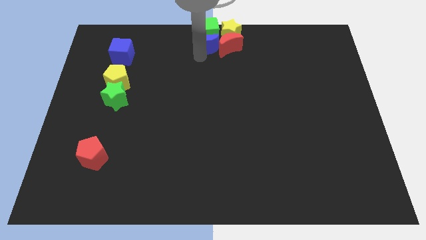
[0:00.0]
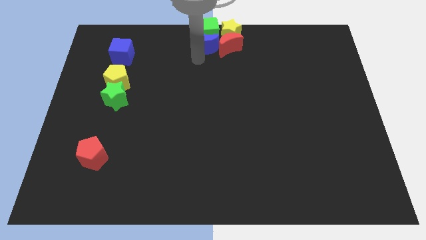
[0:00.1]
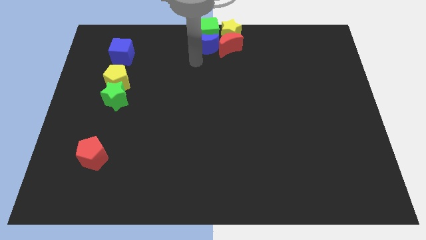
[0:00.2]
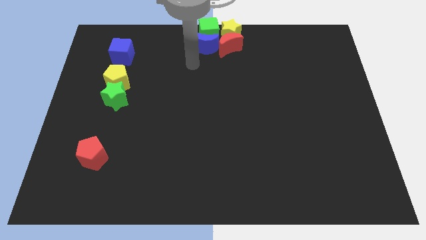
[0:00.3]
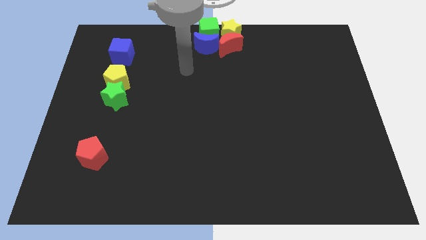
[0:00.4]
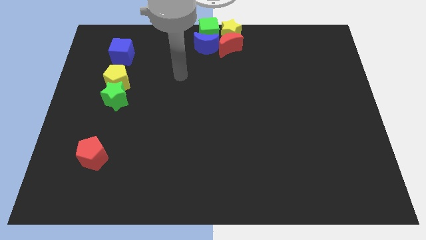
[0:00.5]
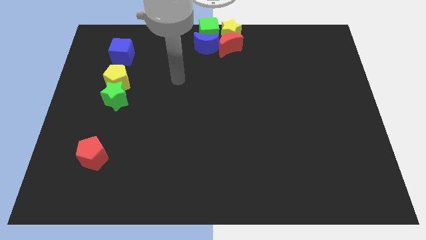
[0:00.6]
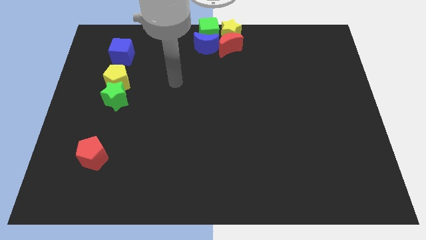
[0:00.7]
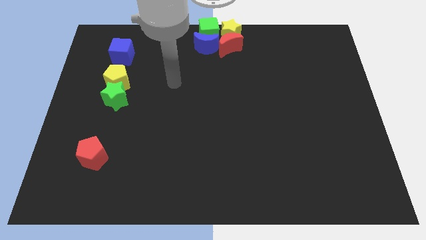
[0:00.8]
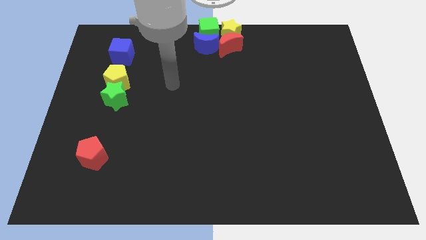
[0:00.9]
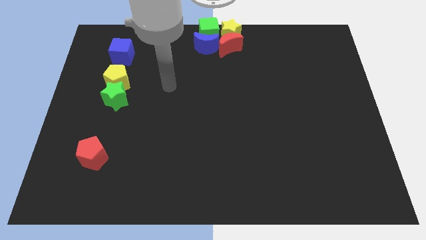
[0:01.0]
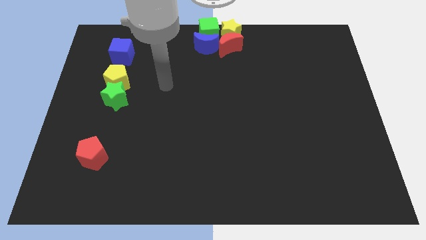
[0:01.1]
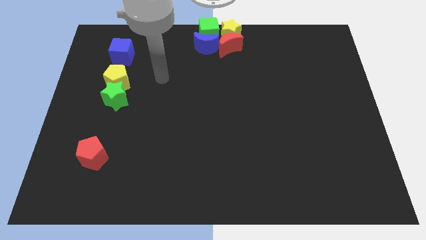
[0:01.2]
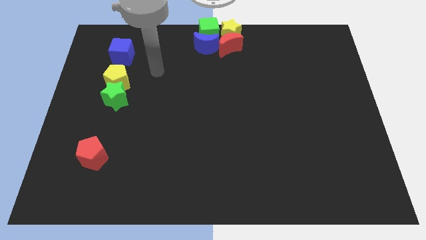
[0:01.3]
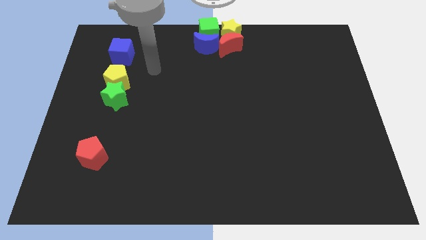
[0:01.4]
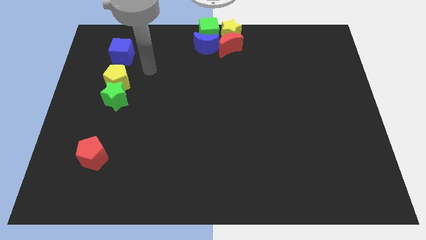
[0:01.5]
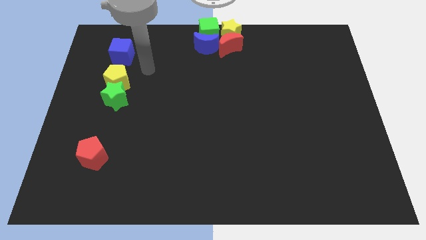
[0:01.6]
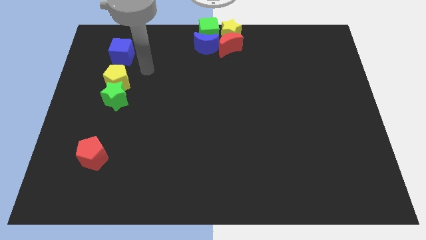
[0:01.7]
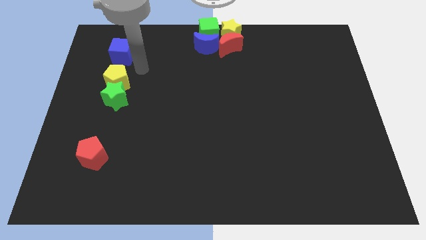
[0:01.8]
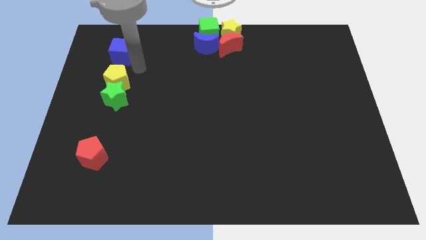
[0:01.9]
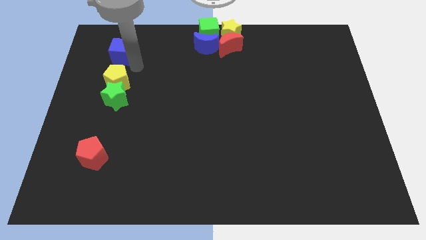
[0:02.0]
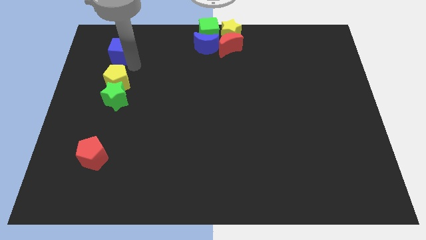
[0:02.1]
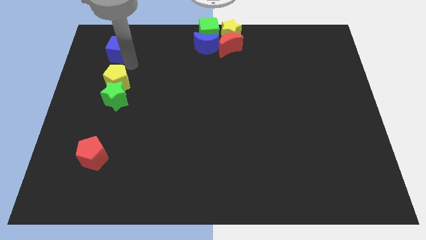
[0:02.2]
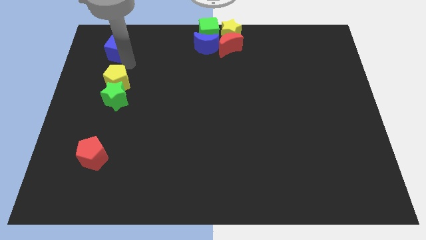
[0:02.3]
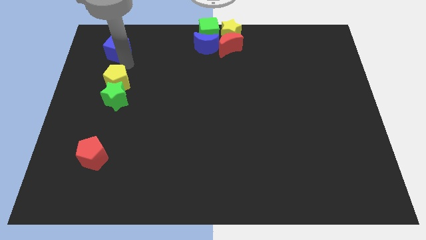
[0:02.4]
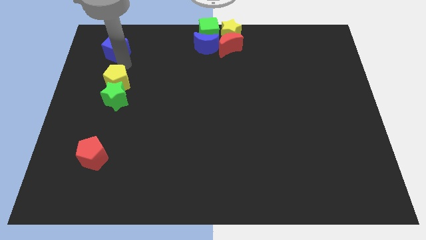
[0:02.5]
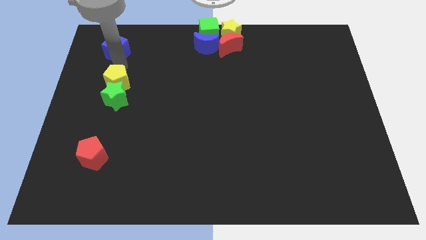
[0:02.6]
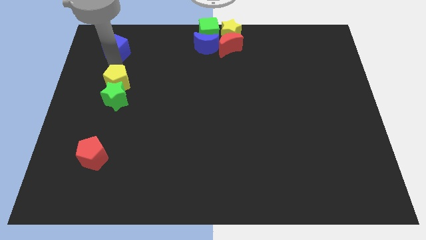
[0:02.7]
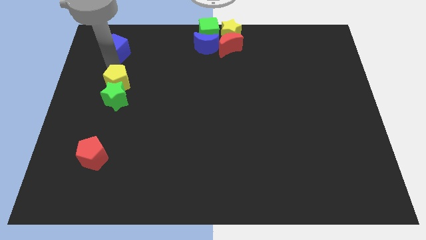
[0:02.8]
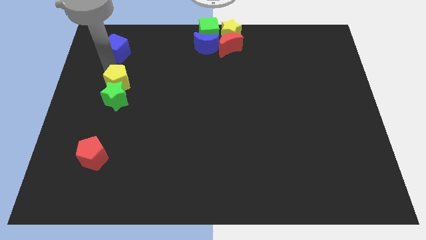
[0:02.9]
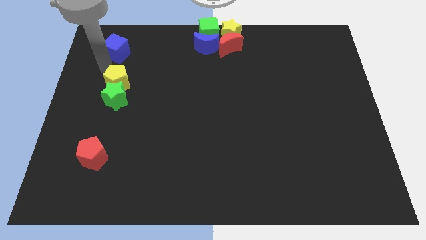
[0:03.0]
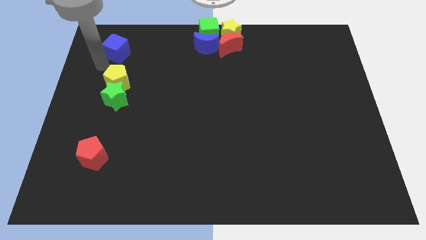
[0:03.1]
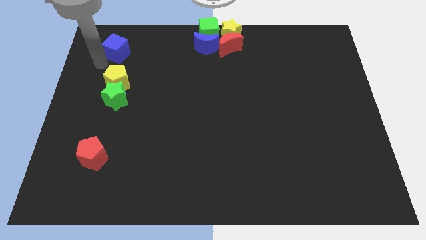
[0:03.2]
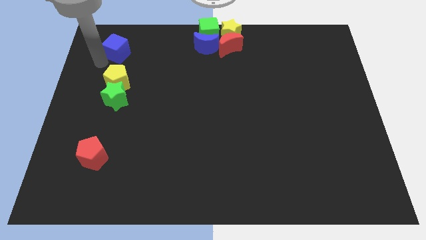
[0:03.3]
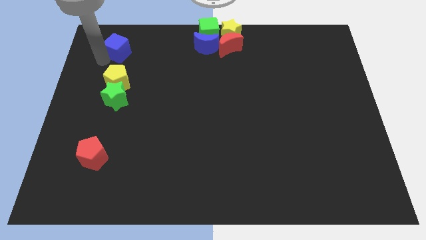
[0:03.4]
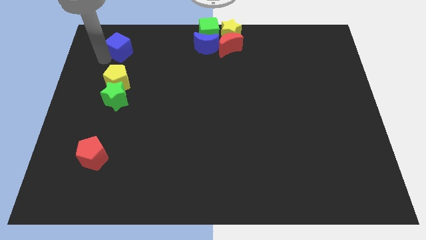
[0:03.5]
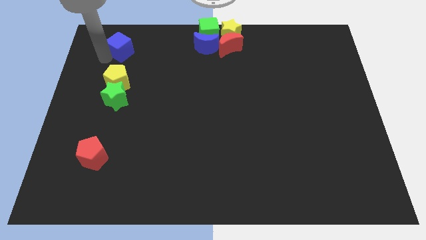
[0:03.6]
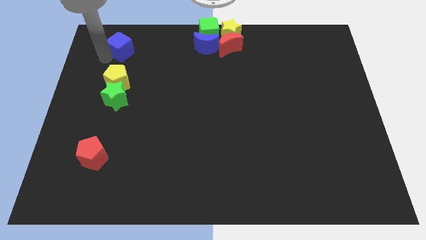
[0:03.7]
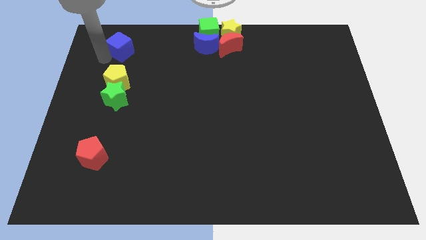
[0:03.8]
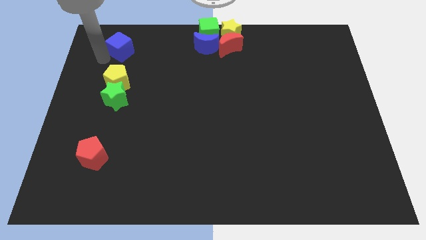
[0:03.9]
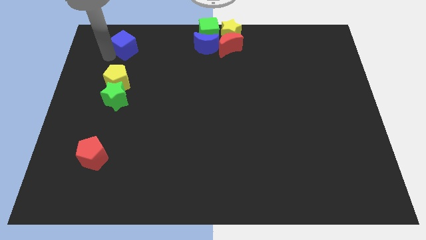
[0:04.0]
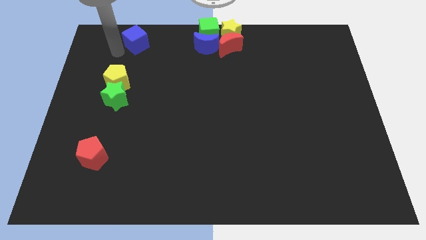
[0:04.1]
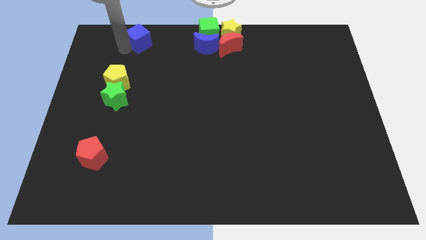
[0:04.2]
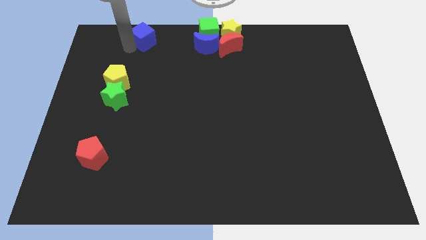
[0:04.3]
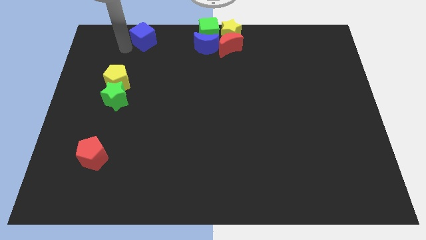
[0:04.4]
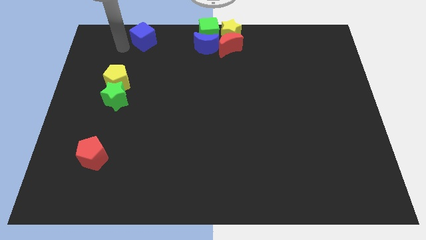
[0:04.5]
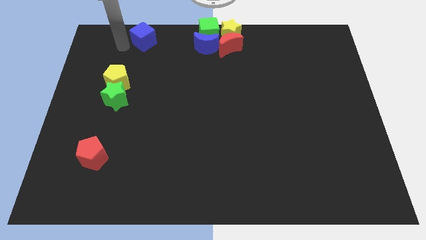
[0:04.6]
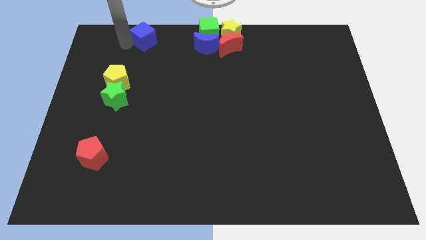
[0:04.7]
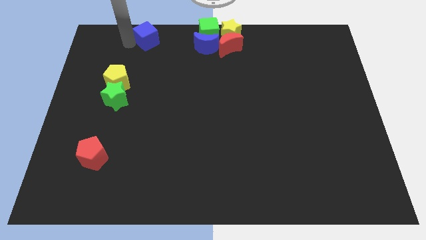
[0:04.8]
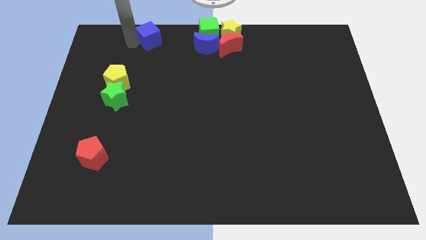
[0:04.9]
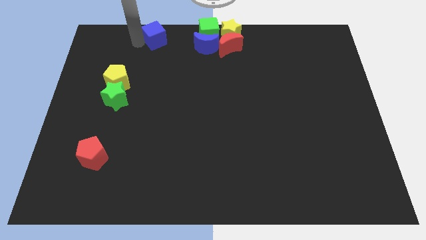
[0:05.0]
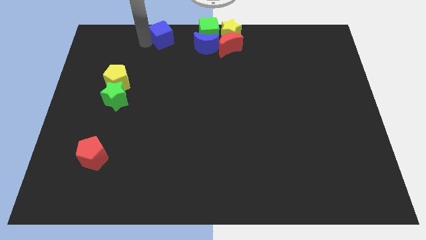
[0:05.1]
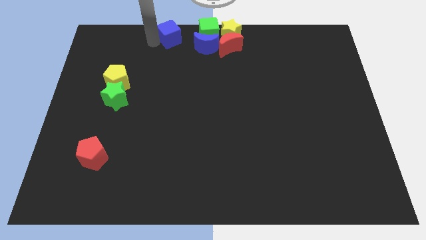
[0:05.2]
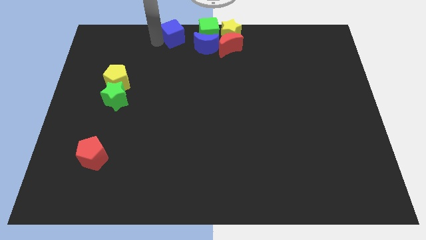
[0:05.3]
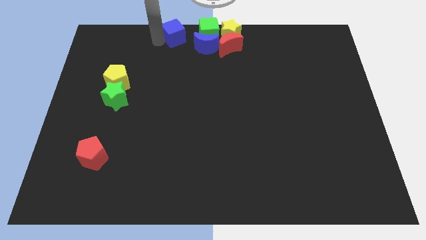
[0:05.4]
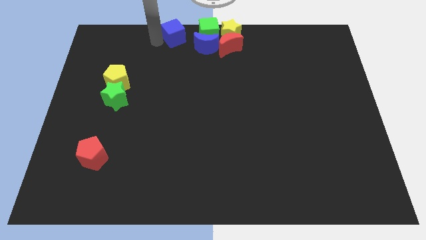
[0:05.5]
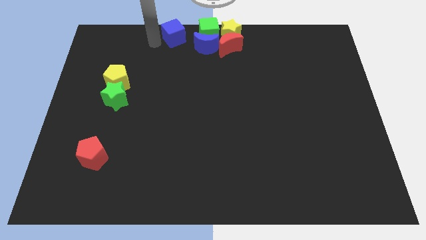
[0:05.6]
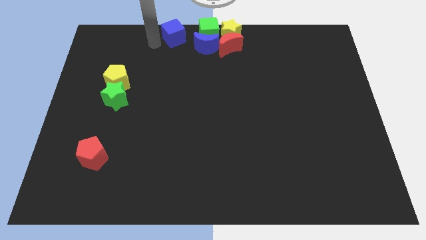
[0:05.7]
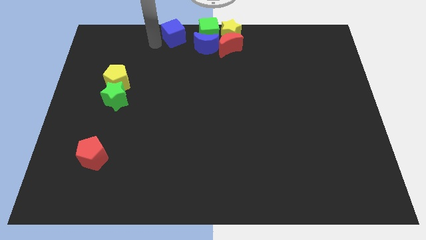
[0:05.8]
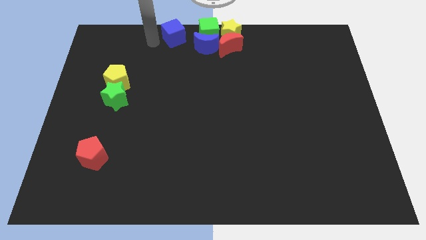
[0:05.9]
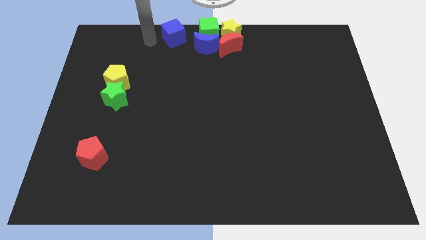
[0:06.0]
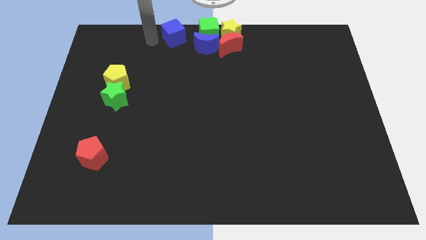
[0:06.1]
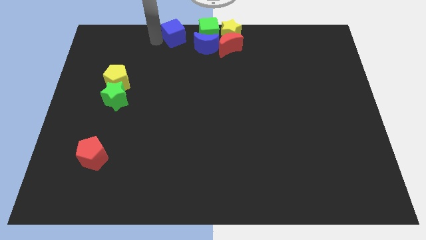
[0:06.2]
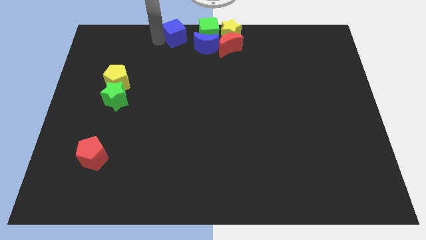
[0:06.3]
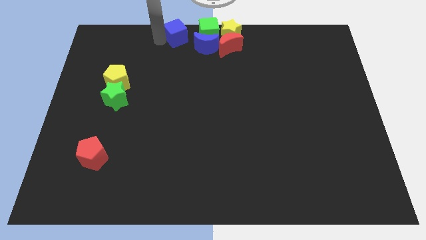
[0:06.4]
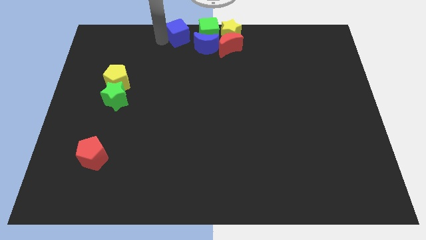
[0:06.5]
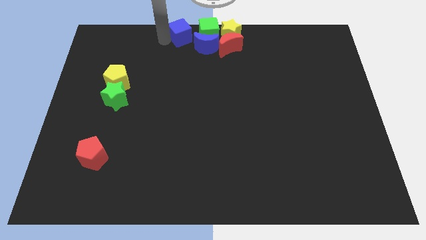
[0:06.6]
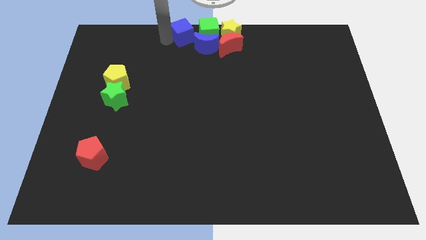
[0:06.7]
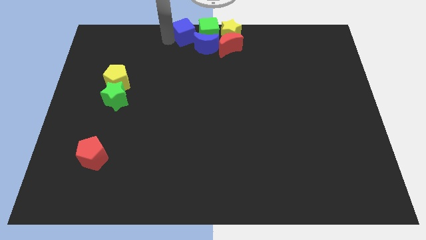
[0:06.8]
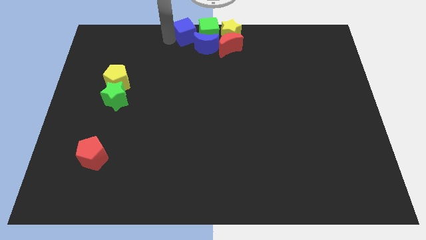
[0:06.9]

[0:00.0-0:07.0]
slide the blue cube to the group of blocks

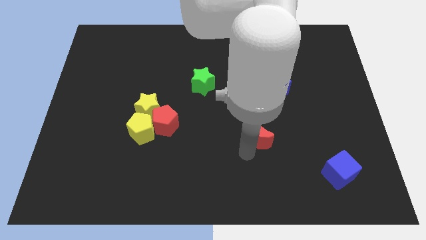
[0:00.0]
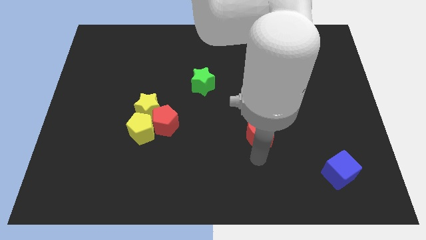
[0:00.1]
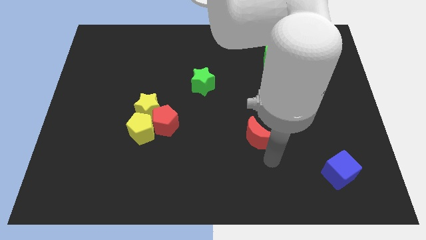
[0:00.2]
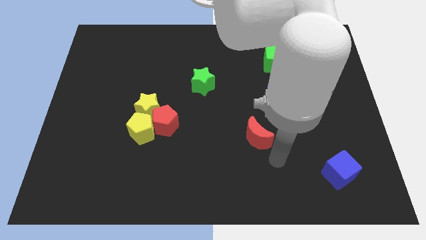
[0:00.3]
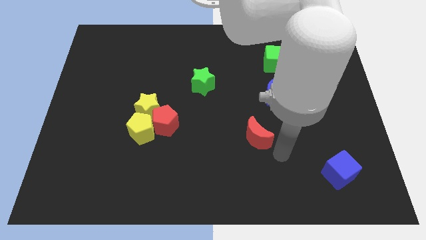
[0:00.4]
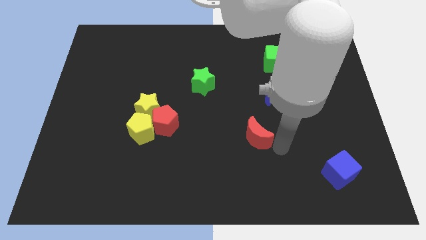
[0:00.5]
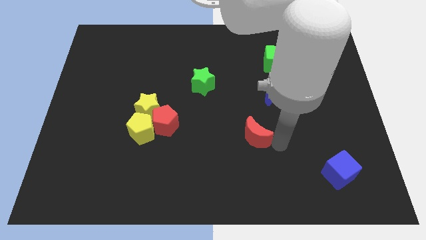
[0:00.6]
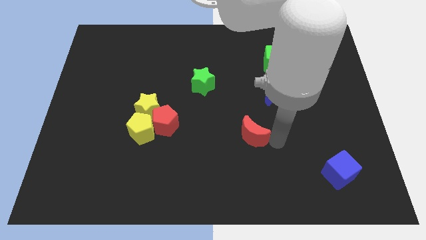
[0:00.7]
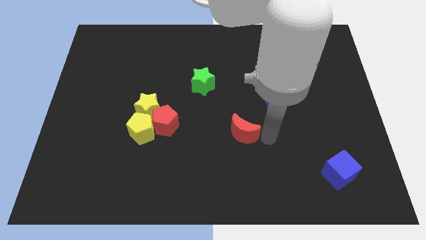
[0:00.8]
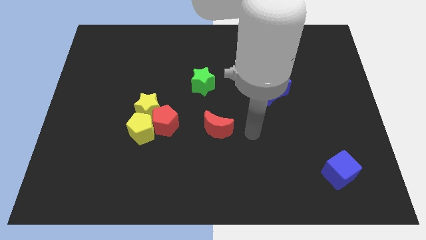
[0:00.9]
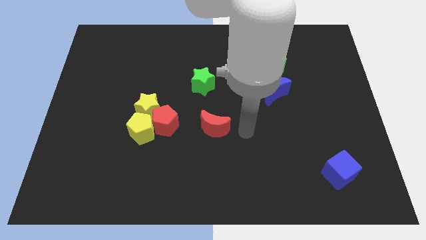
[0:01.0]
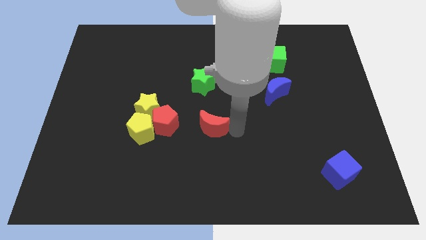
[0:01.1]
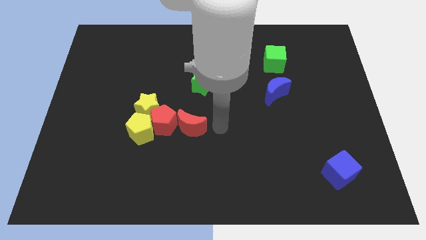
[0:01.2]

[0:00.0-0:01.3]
place red moon to the bottom of green star

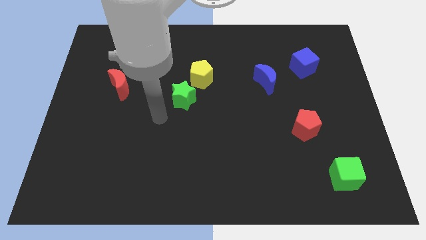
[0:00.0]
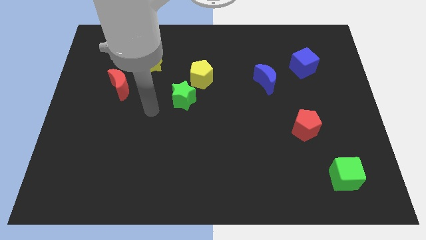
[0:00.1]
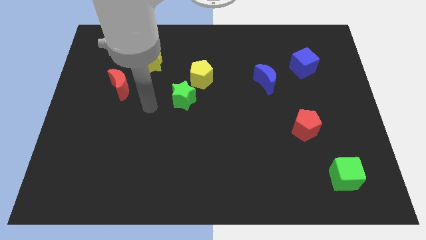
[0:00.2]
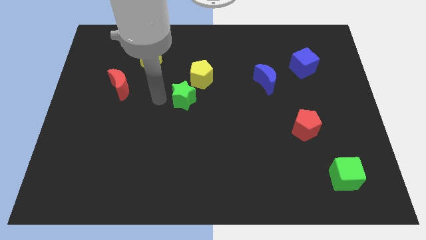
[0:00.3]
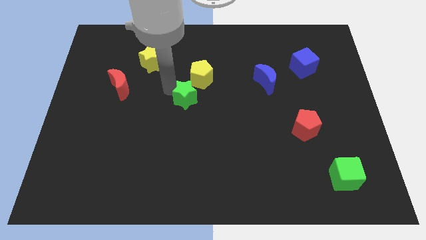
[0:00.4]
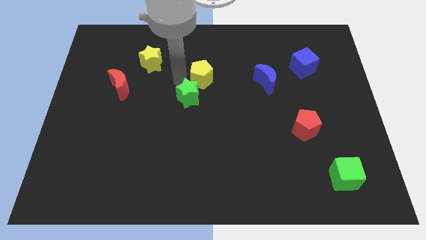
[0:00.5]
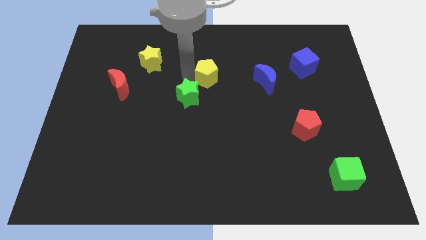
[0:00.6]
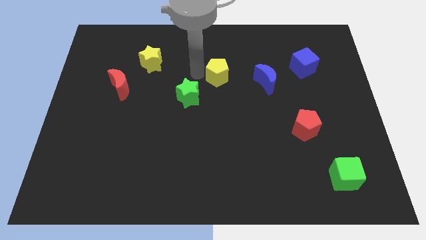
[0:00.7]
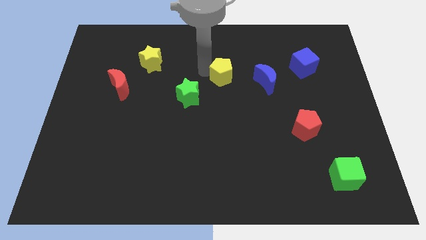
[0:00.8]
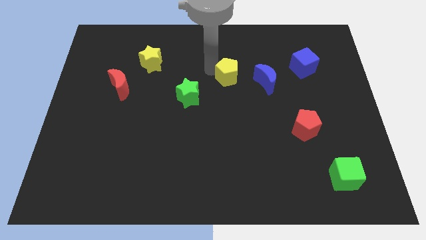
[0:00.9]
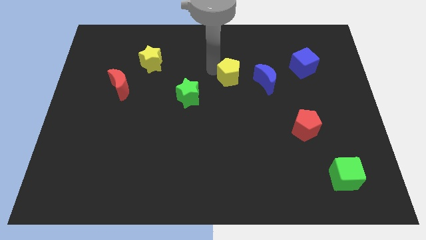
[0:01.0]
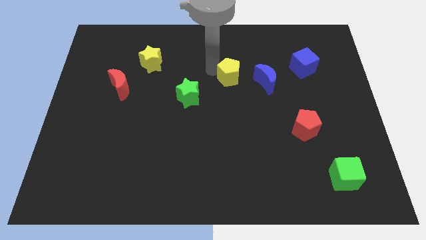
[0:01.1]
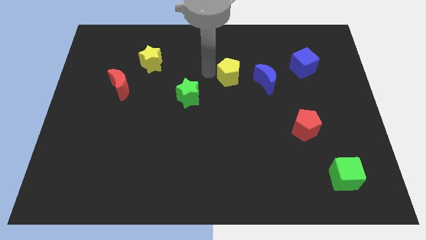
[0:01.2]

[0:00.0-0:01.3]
move the yellow pentagon away from the green star
